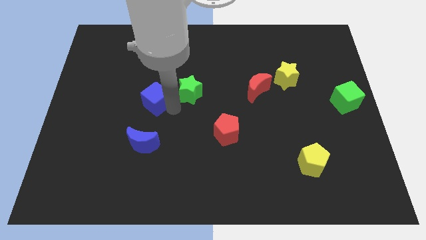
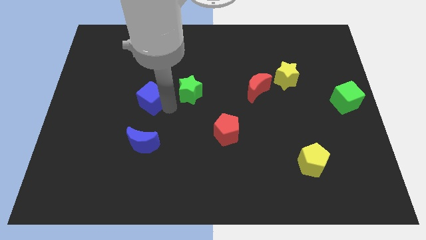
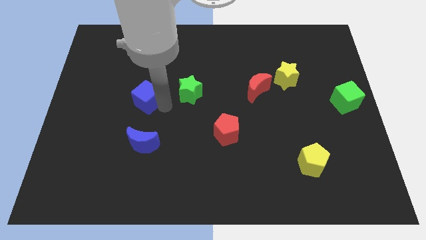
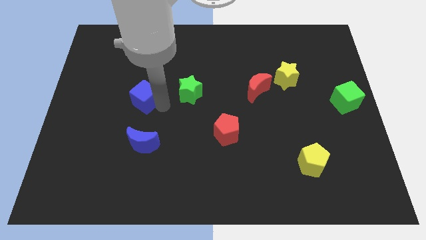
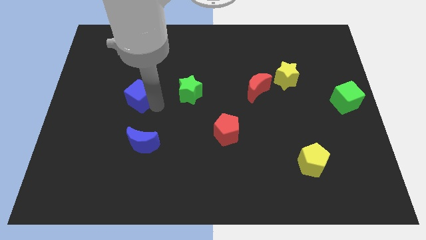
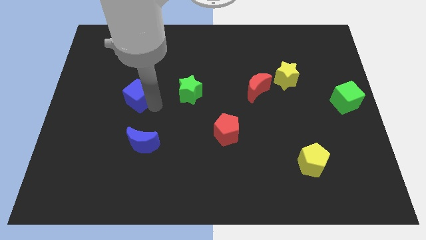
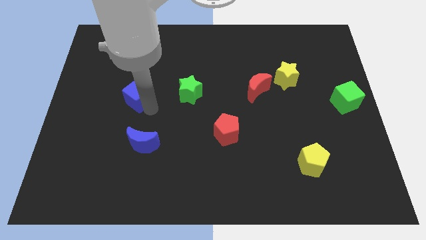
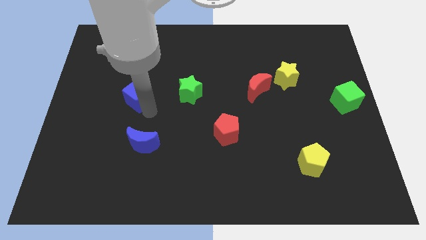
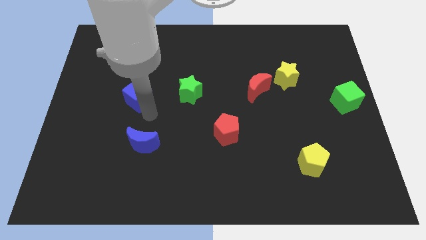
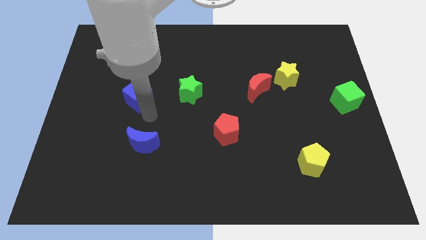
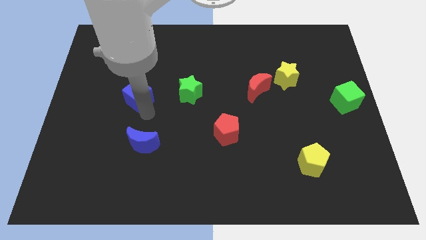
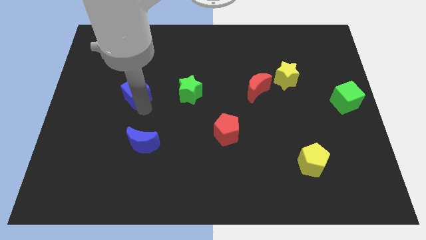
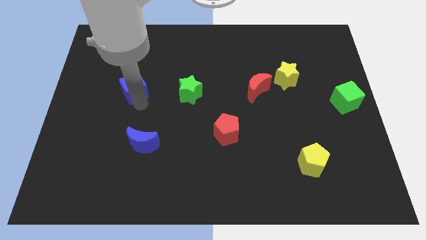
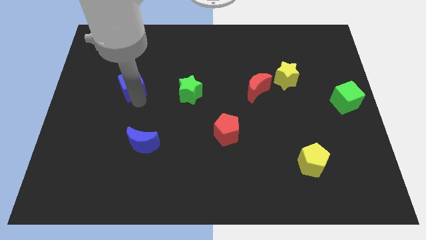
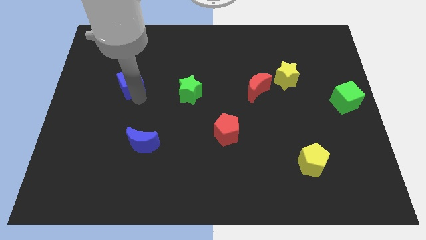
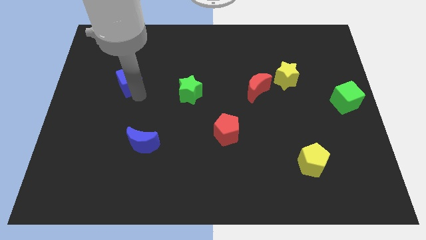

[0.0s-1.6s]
move the blue cube away from the green star

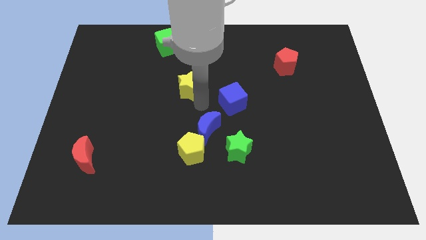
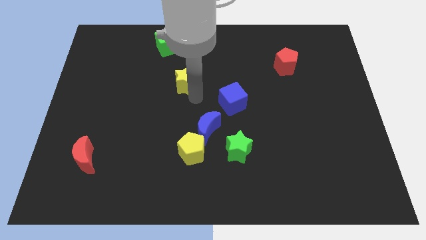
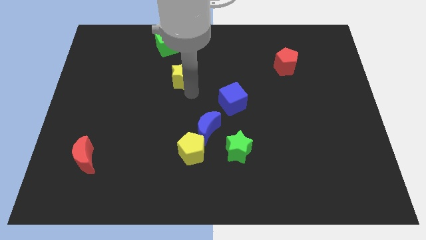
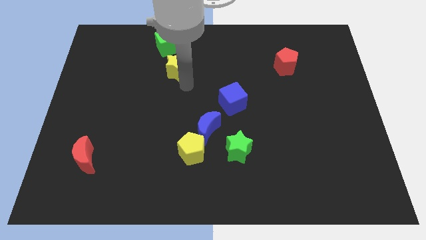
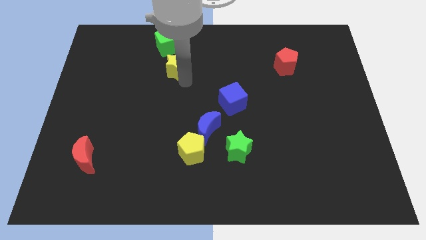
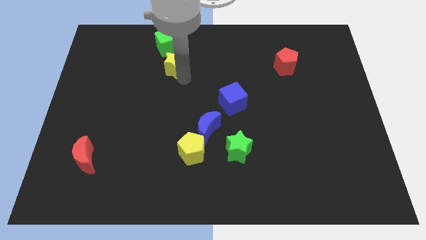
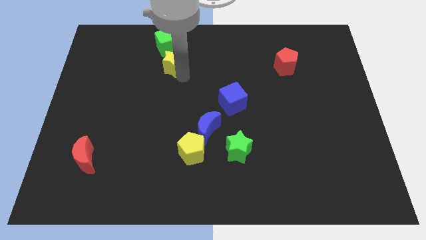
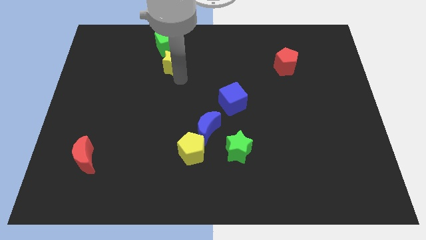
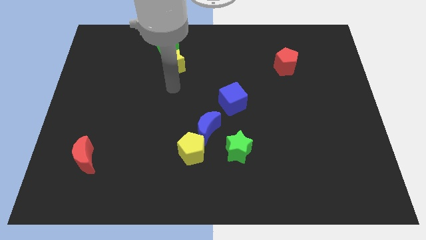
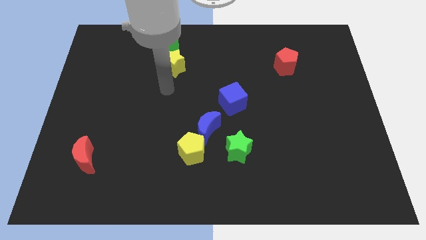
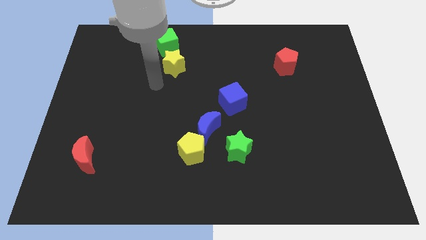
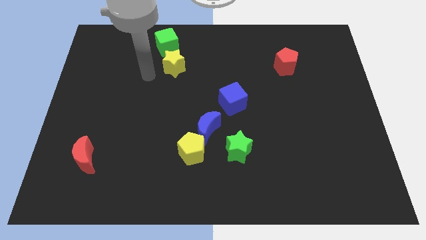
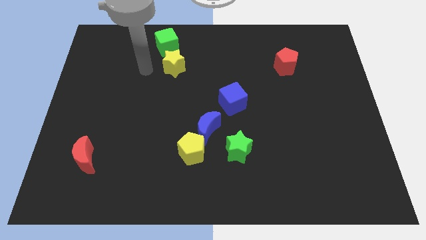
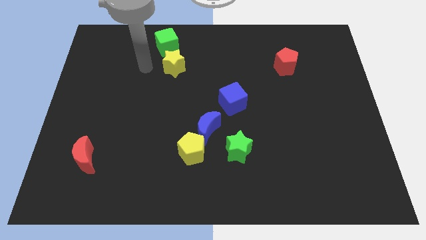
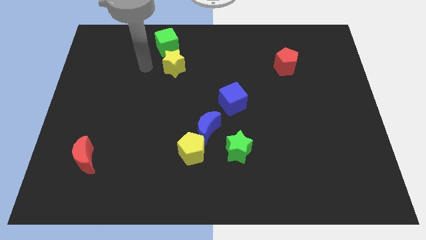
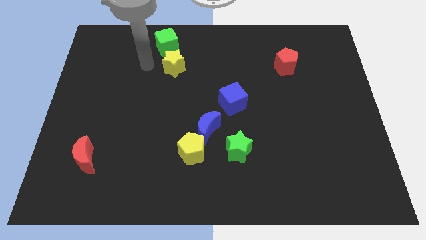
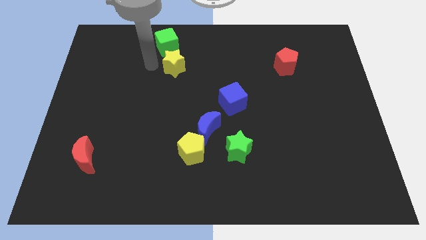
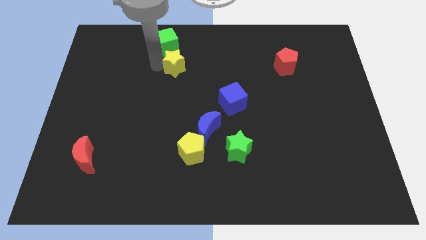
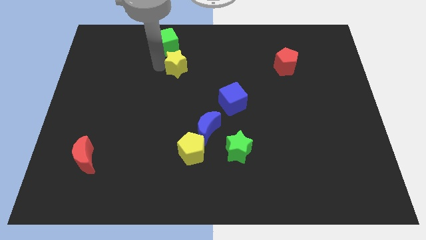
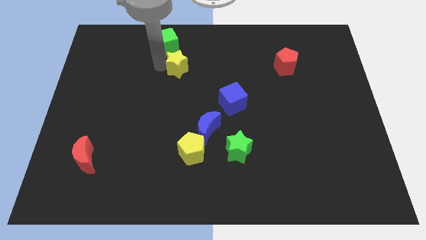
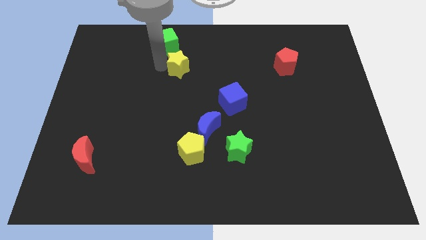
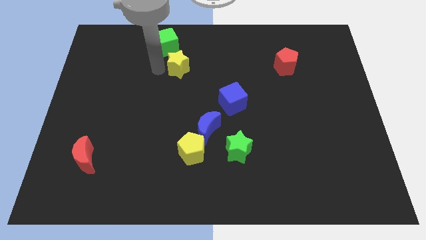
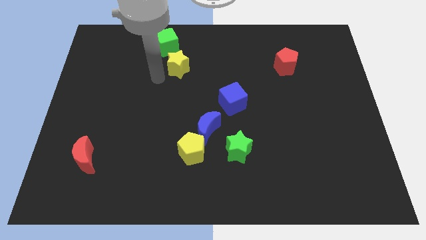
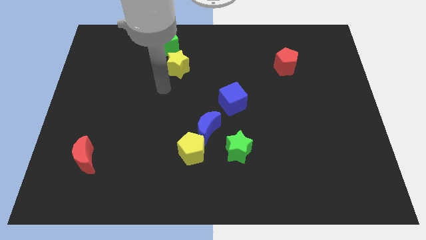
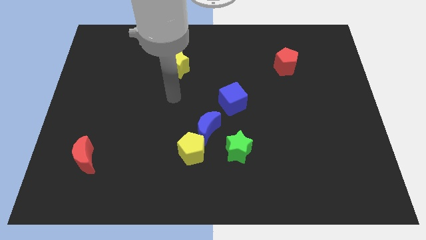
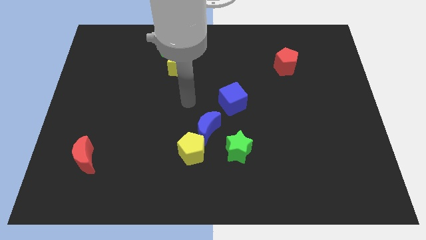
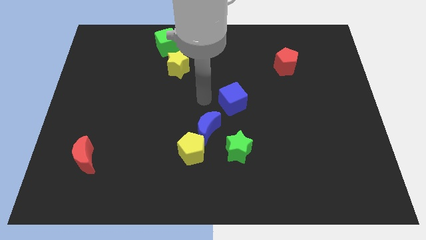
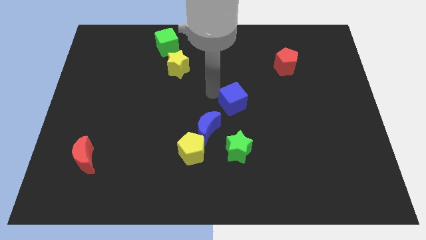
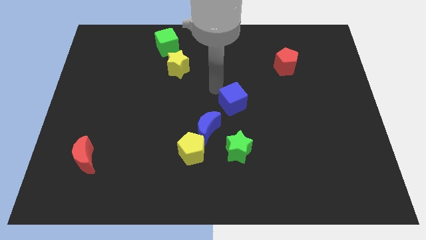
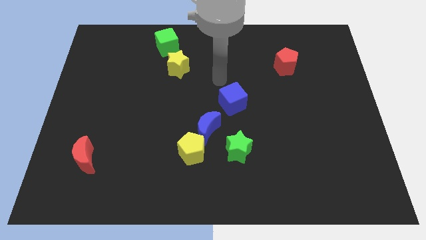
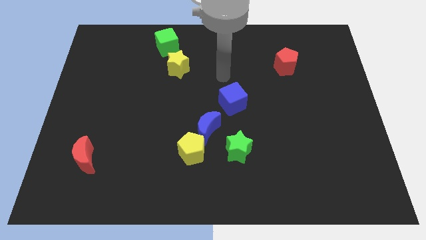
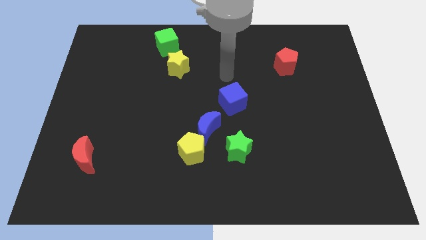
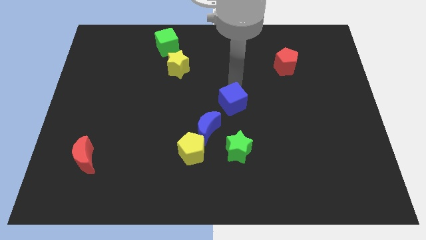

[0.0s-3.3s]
put the yellow star to the bottom right side of the green cube

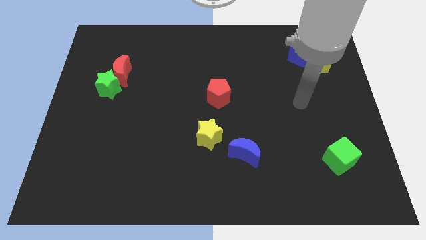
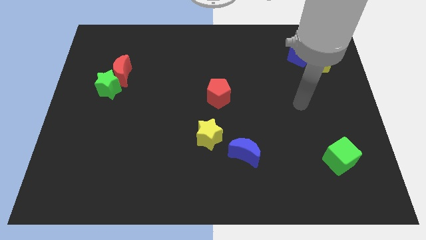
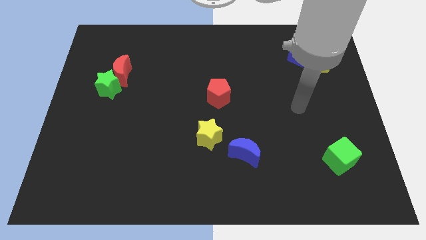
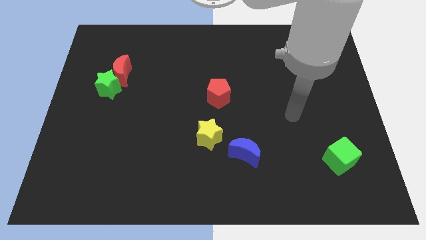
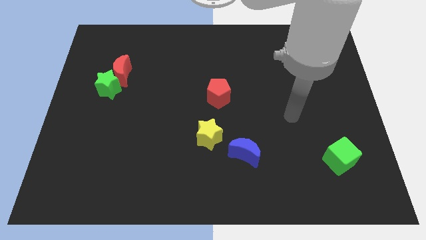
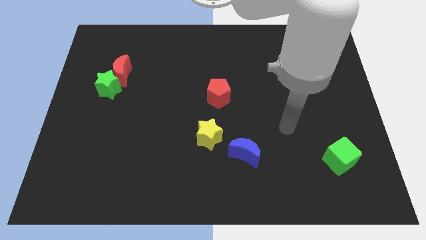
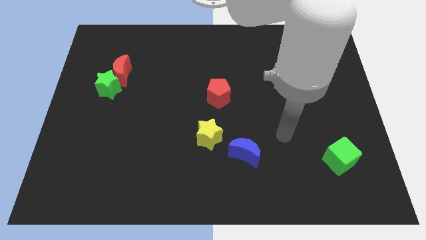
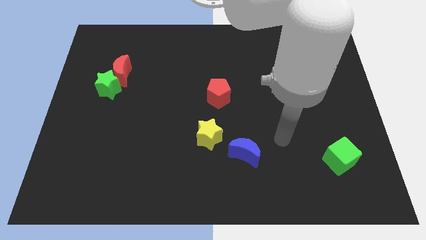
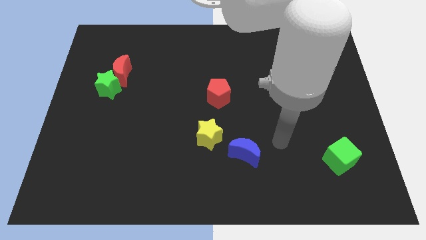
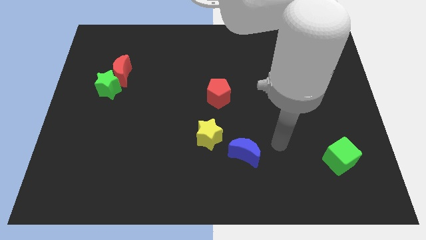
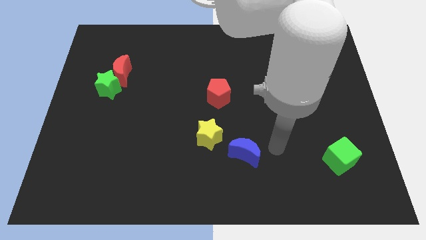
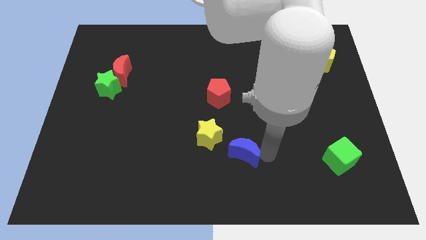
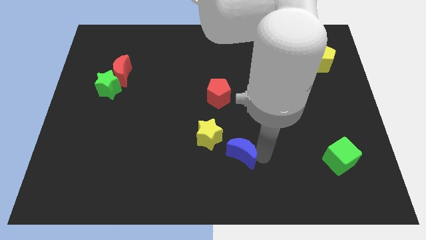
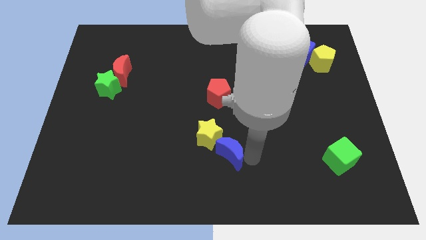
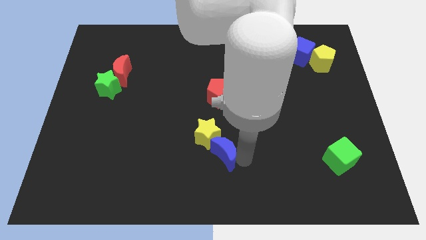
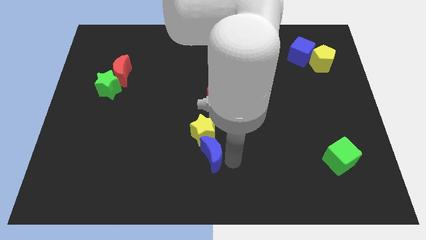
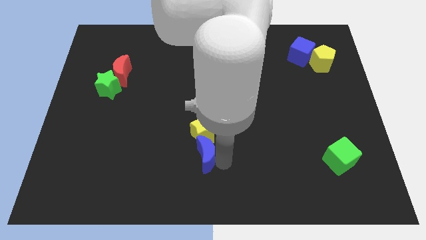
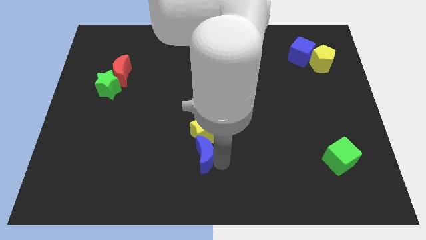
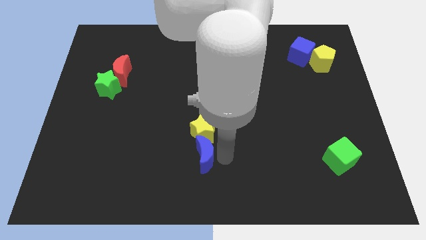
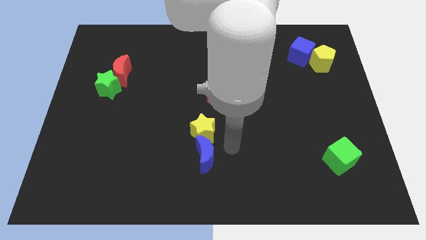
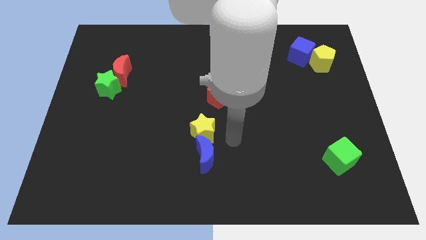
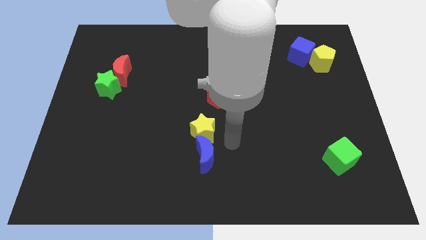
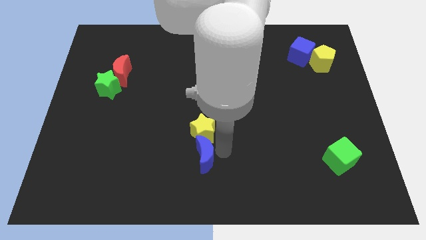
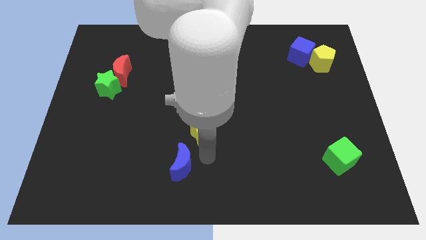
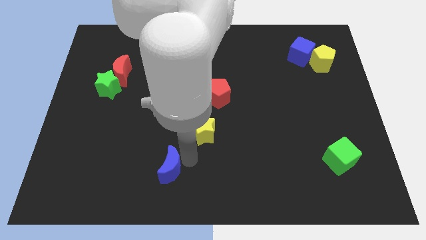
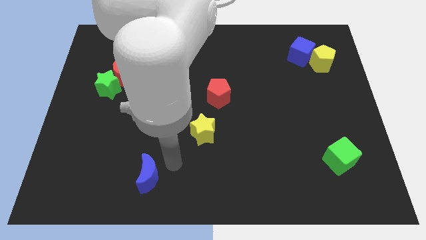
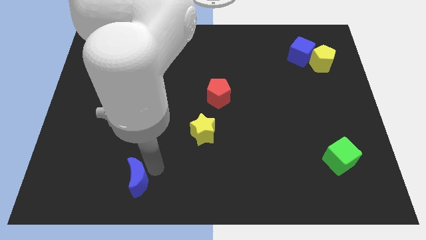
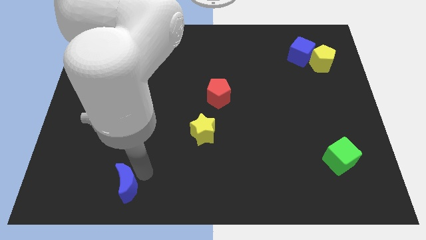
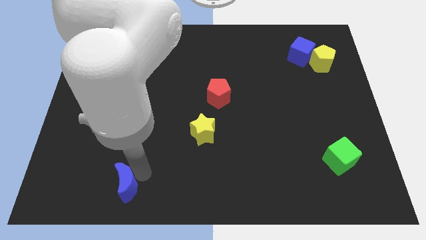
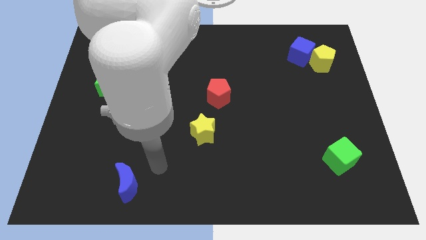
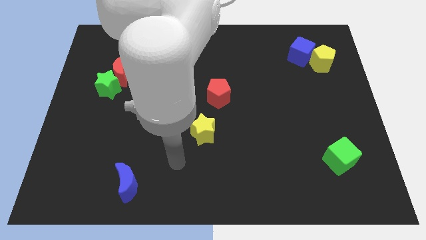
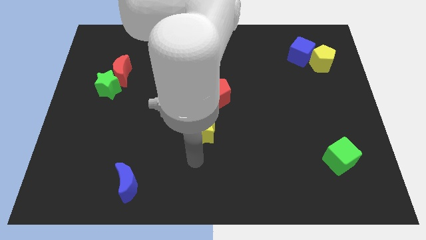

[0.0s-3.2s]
place the blue crescent diagonal to the yellow star

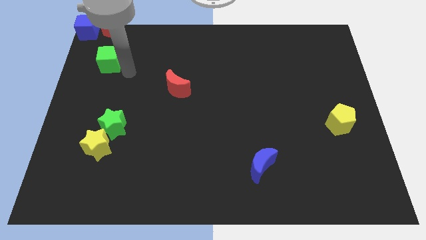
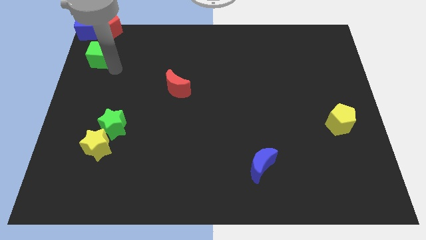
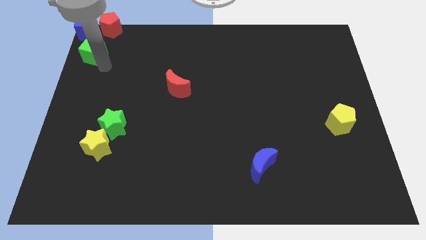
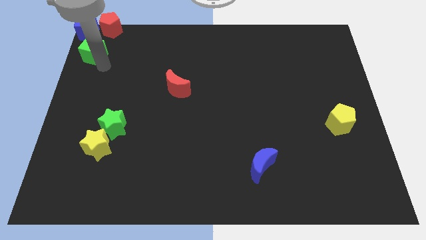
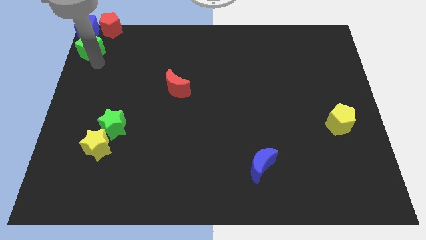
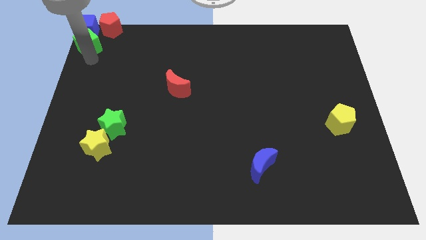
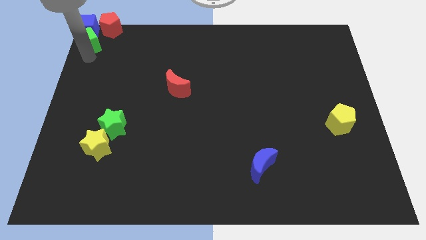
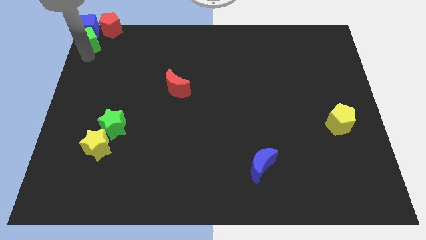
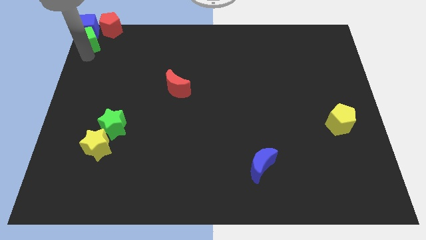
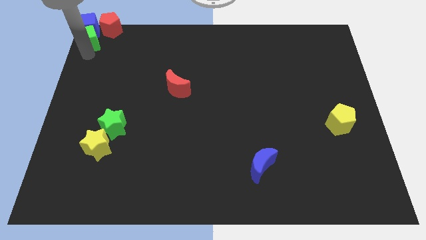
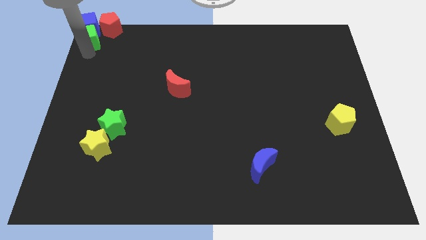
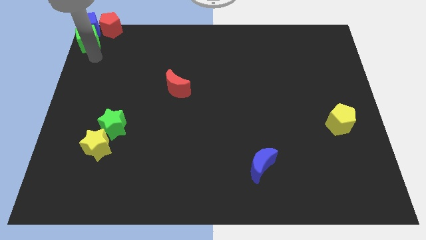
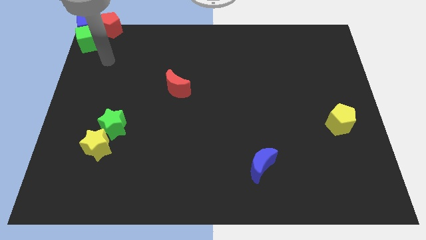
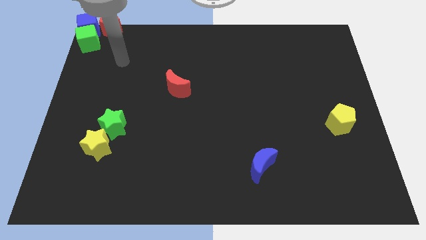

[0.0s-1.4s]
place the green cube below the blue cube
